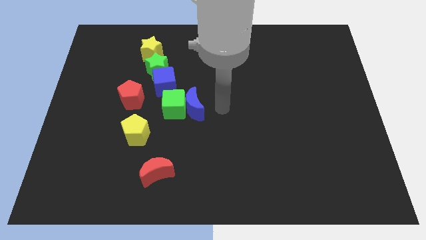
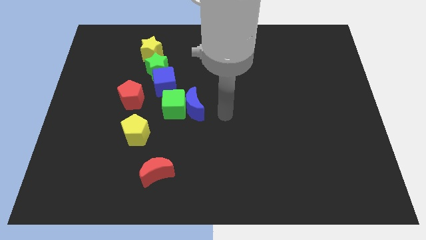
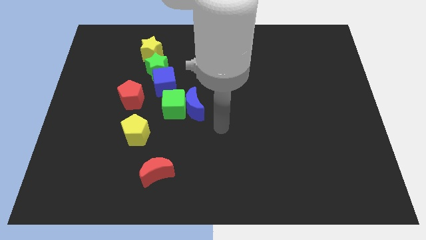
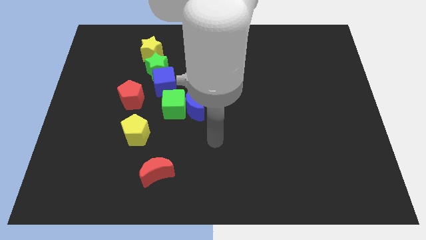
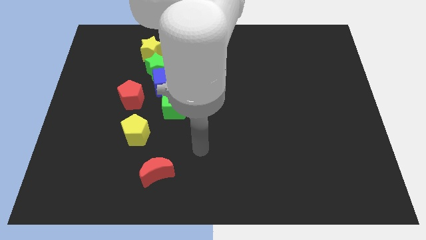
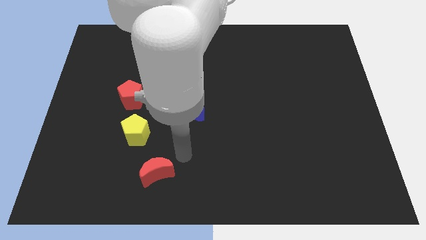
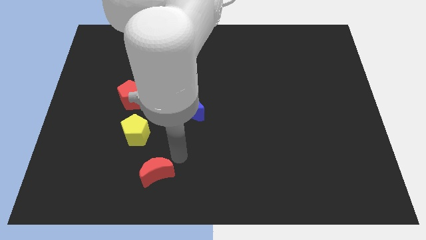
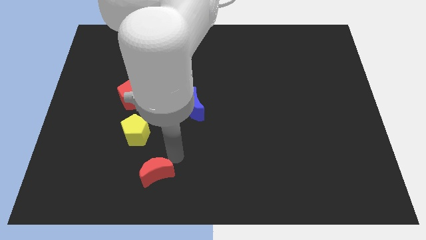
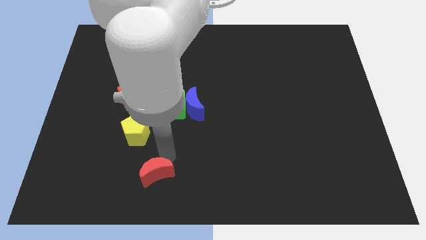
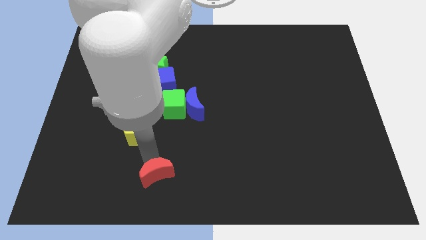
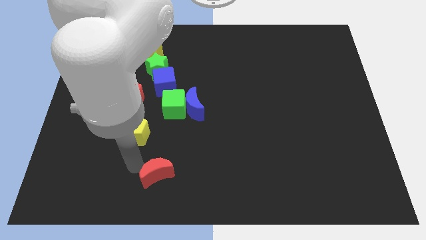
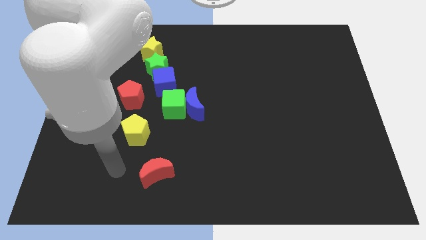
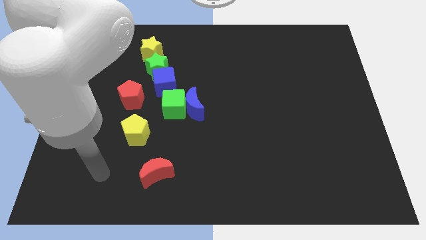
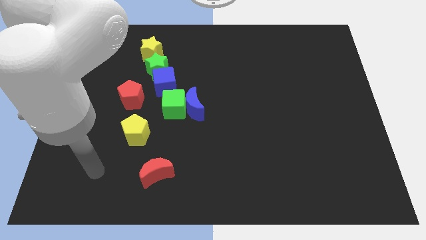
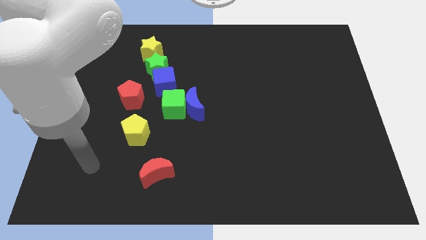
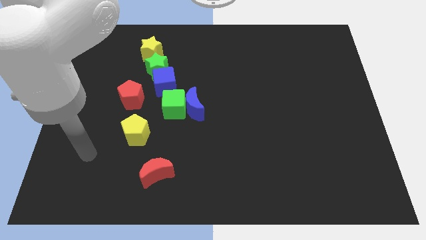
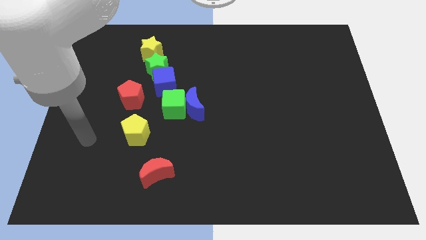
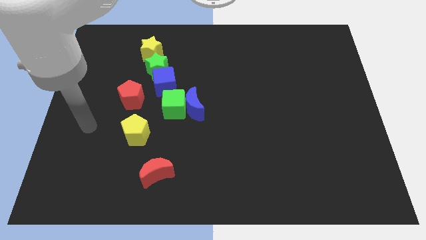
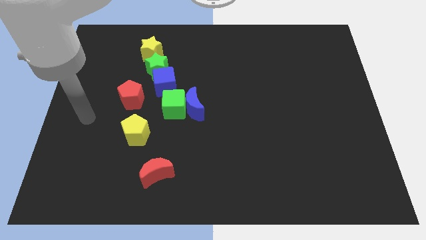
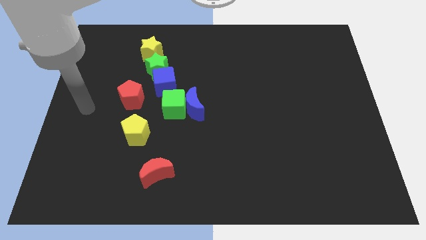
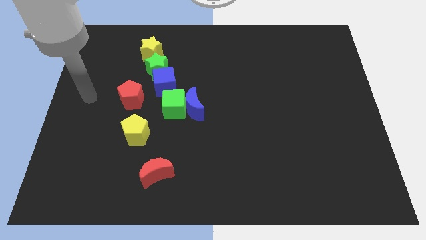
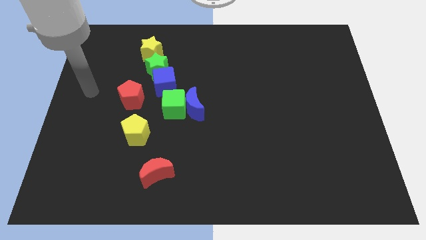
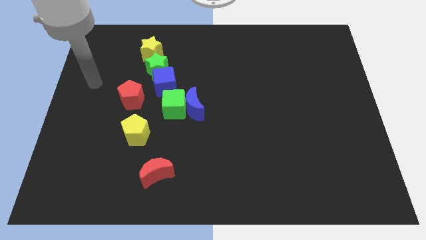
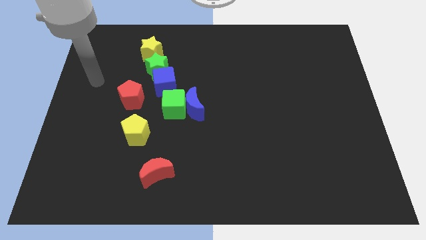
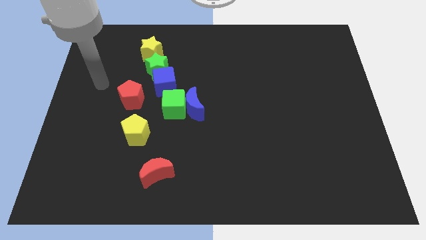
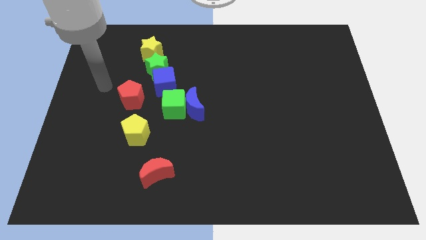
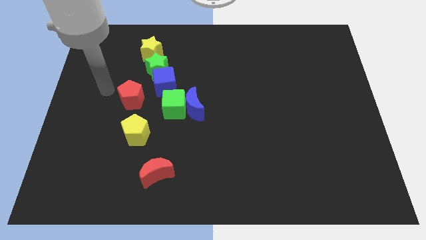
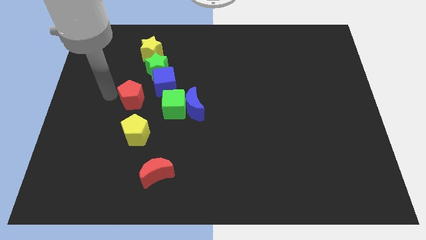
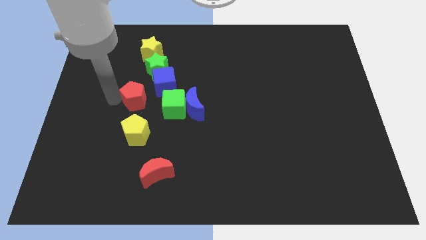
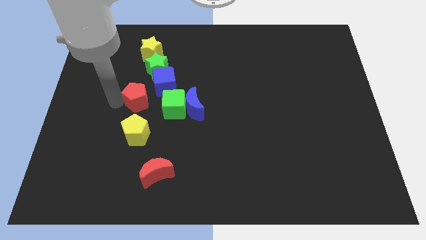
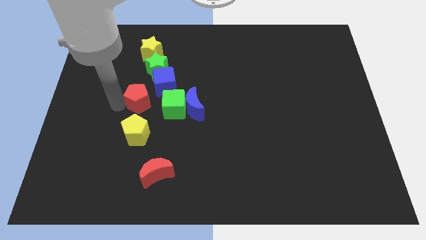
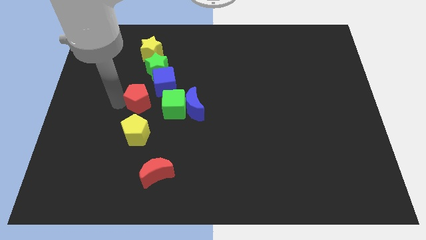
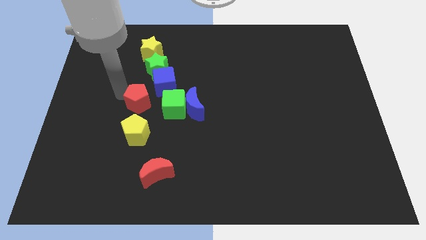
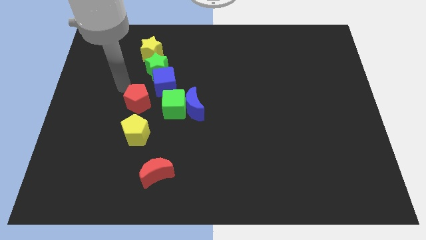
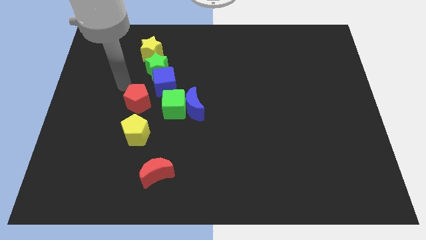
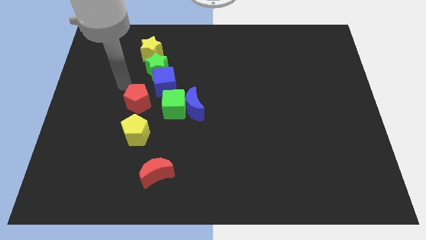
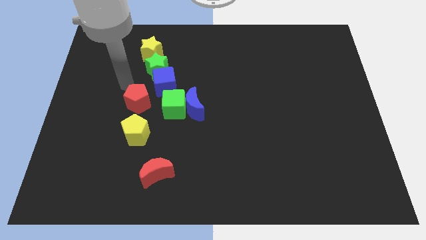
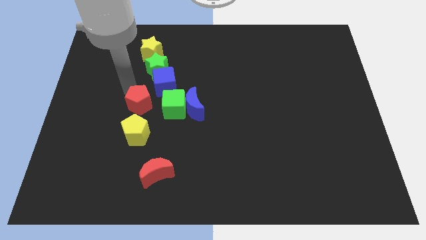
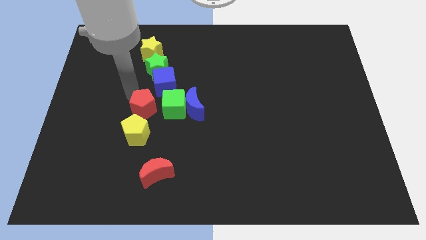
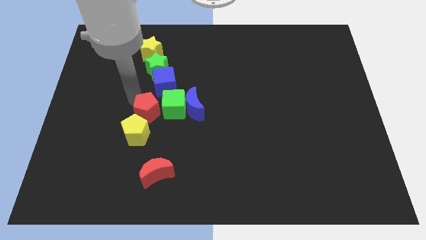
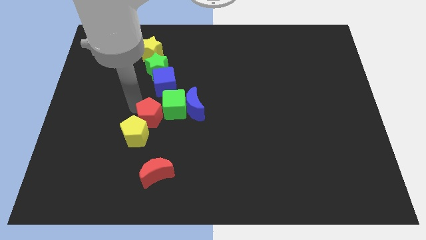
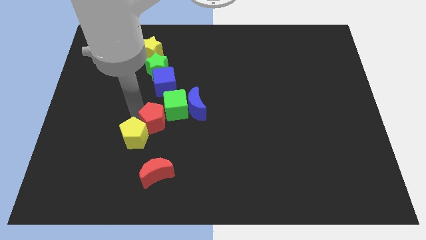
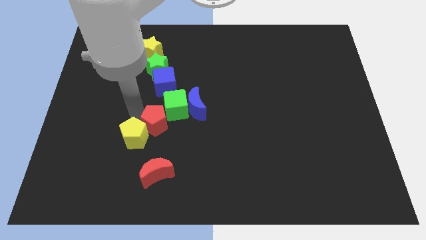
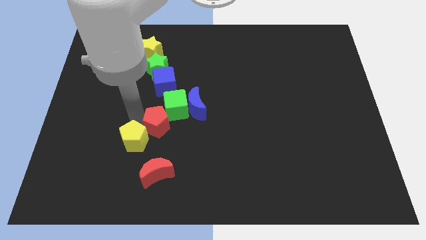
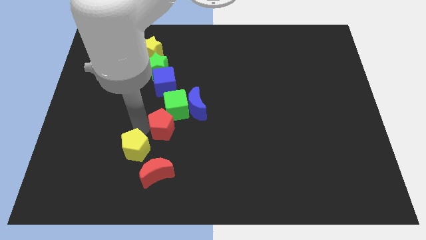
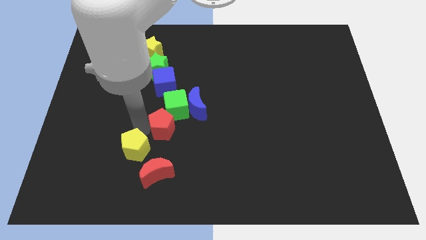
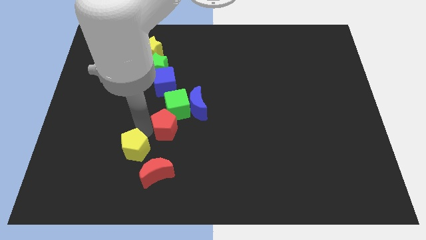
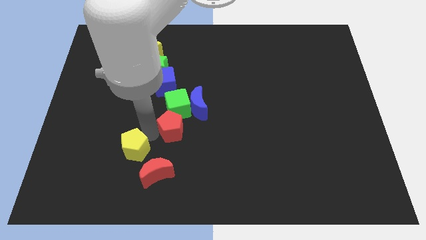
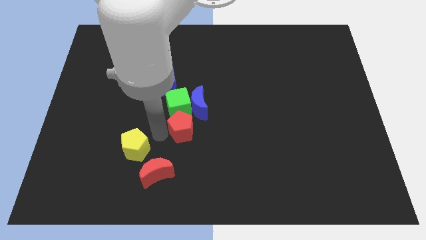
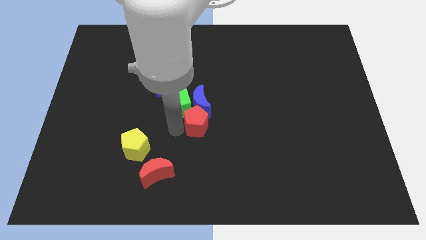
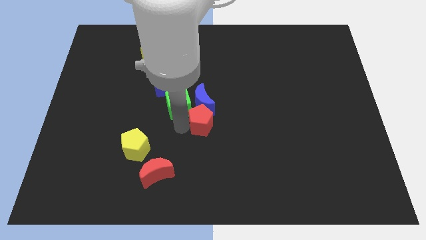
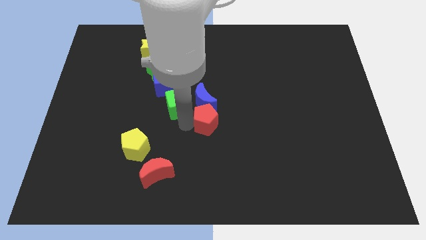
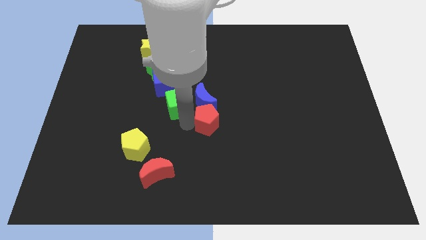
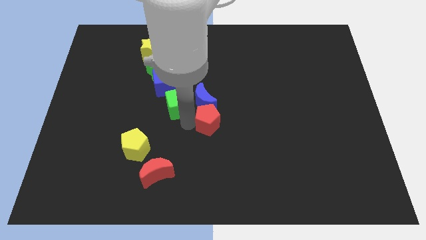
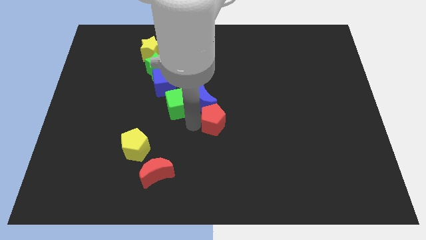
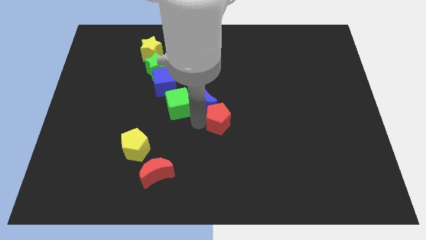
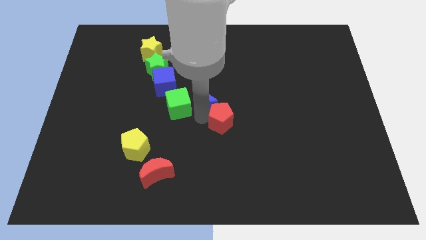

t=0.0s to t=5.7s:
place the red pentagon down to the blue moon

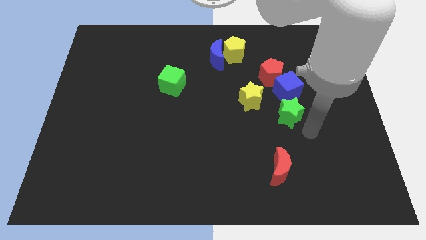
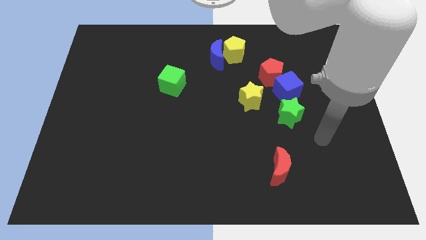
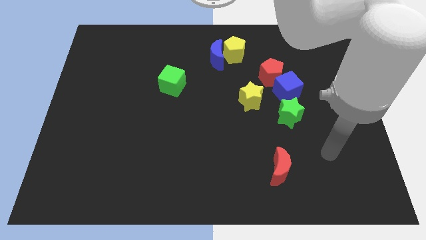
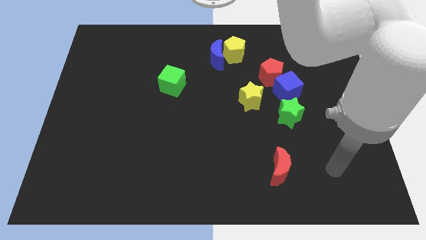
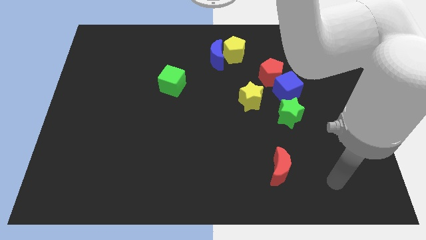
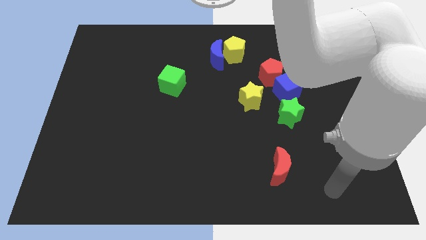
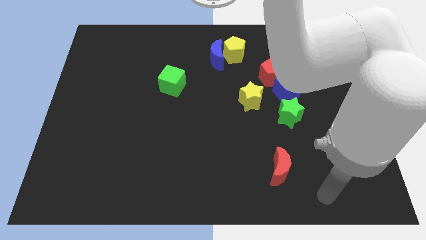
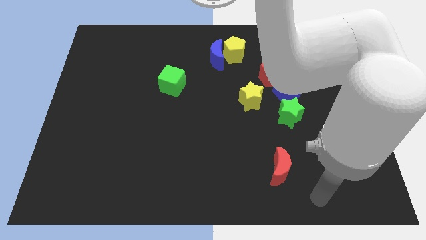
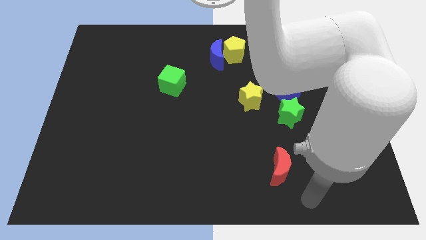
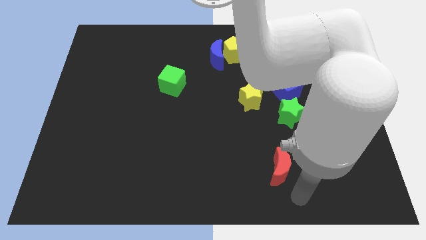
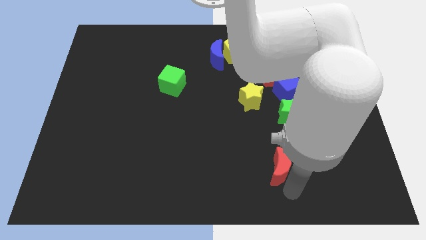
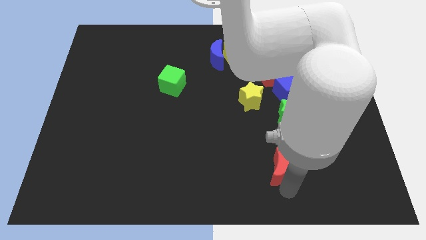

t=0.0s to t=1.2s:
point the arm below the red crescent

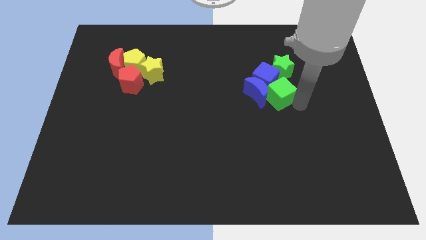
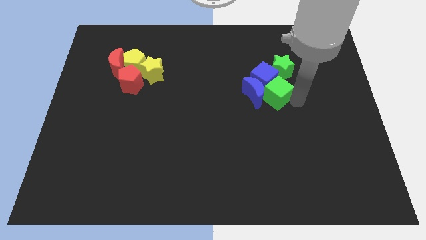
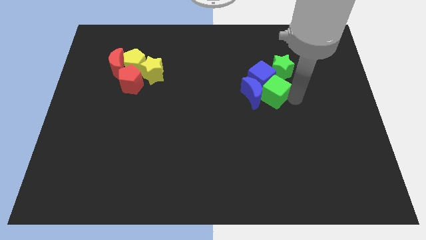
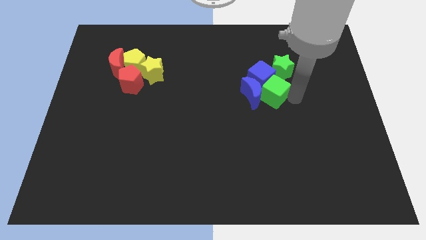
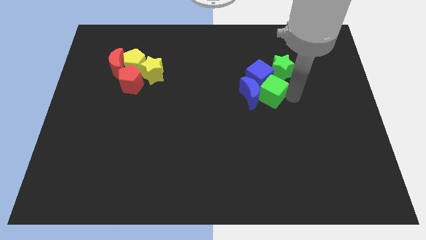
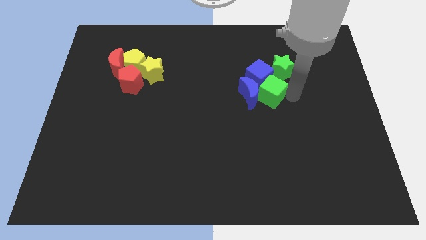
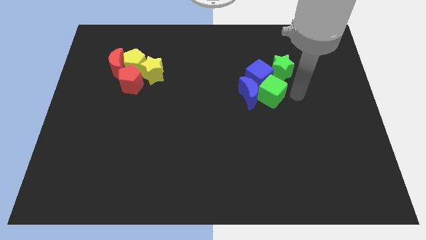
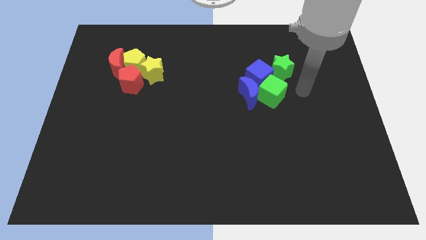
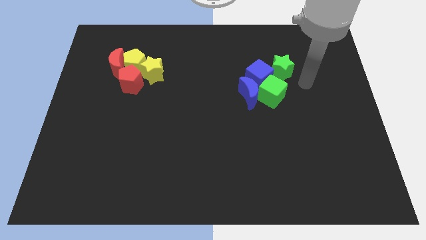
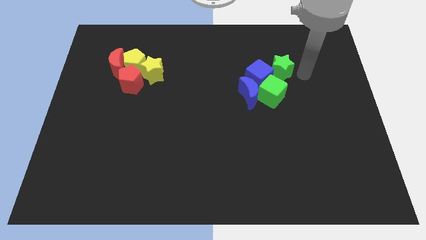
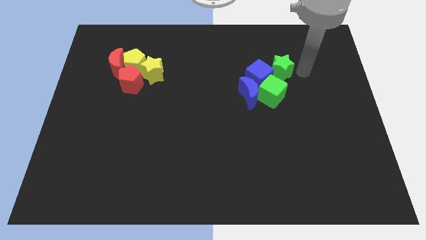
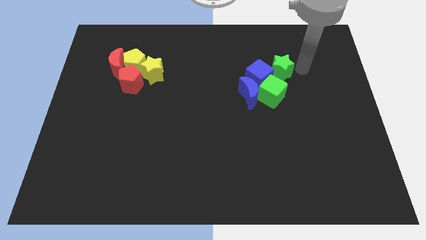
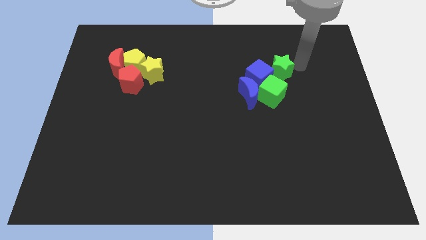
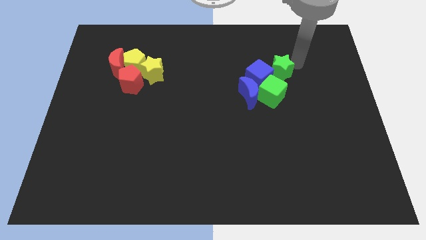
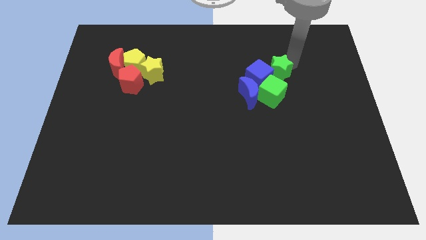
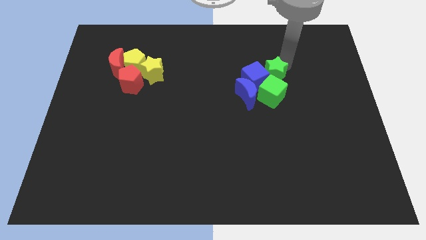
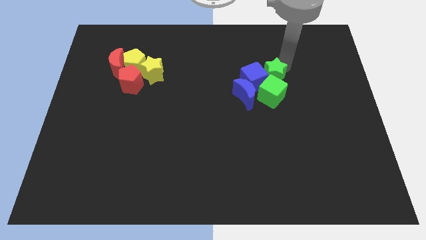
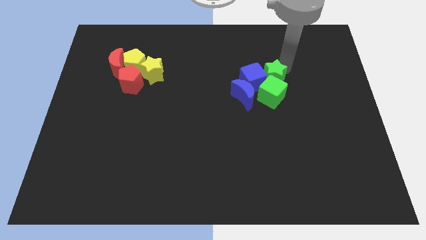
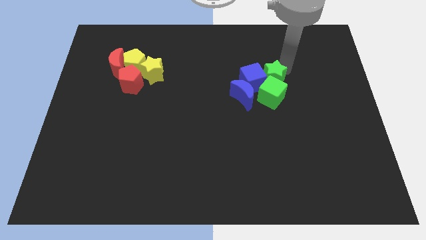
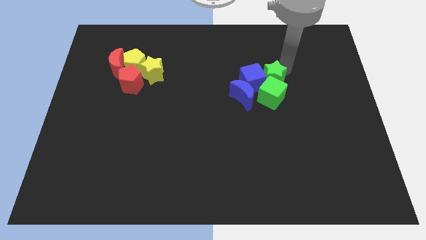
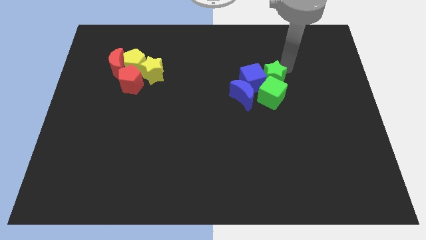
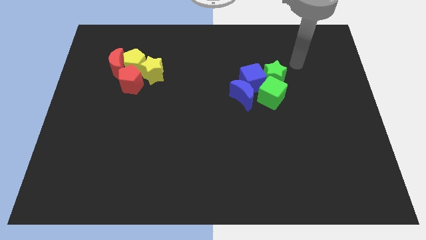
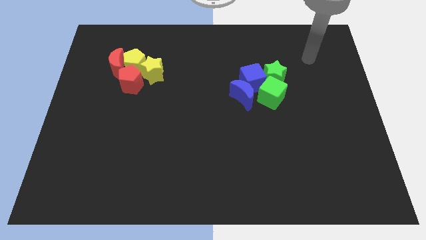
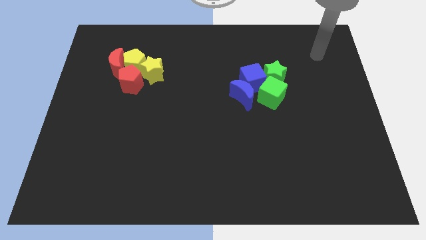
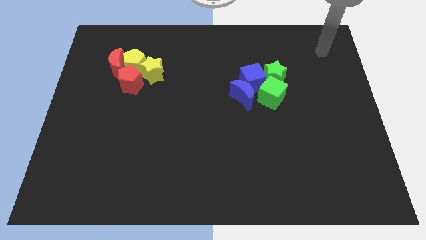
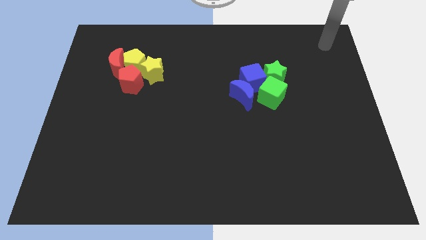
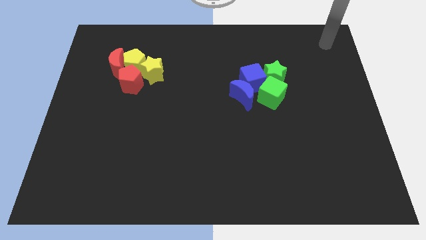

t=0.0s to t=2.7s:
push the green star into group of blocks
